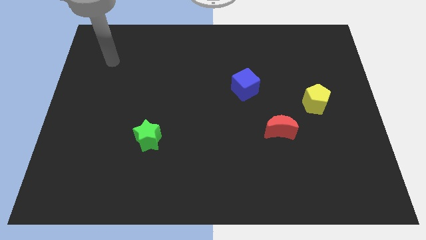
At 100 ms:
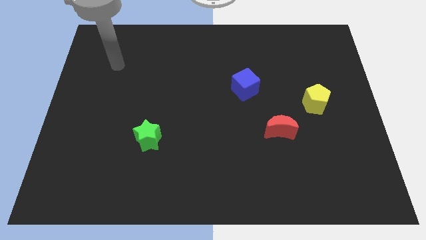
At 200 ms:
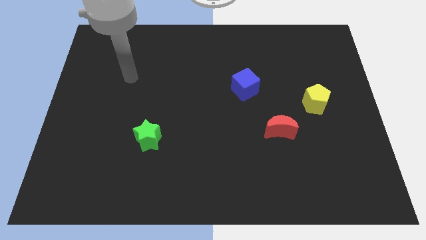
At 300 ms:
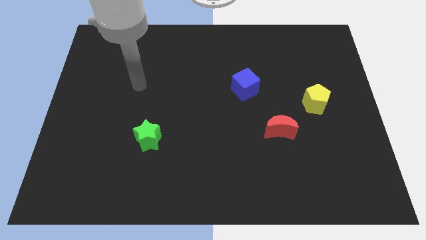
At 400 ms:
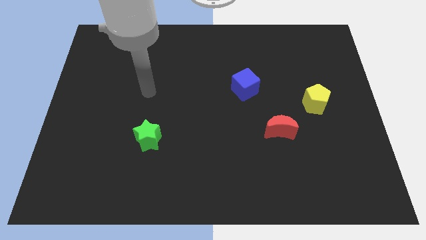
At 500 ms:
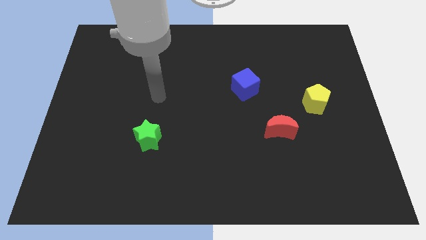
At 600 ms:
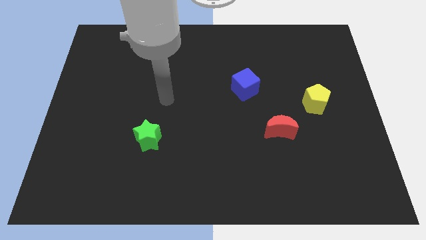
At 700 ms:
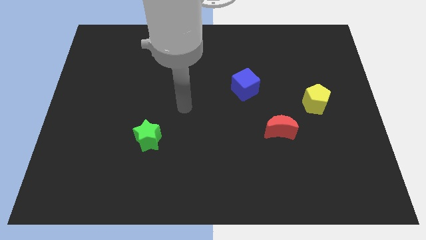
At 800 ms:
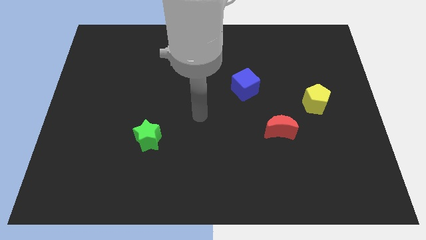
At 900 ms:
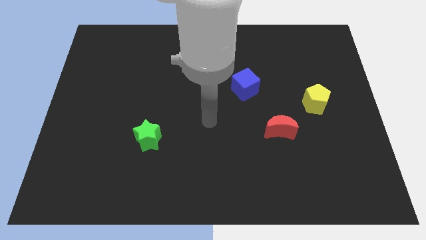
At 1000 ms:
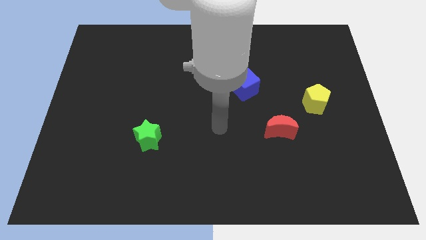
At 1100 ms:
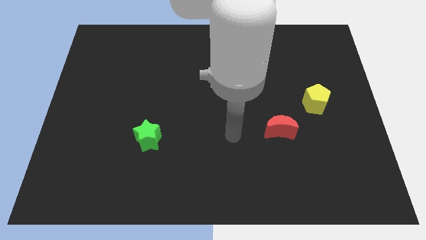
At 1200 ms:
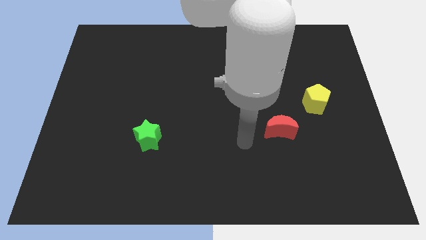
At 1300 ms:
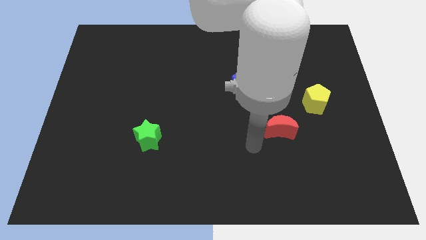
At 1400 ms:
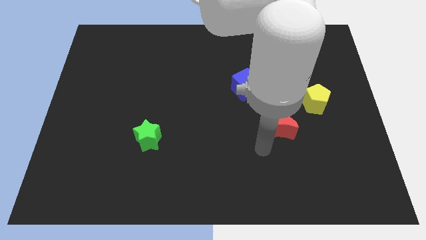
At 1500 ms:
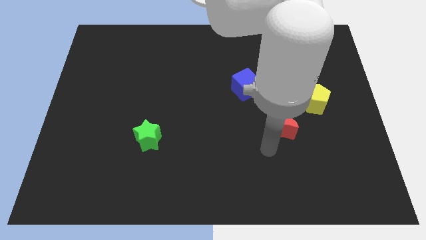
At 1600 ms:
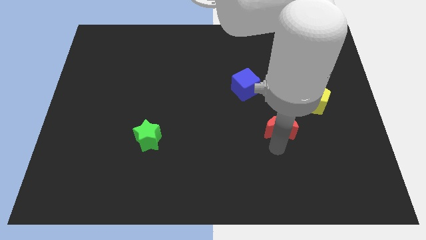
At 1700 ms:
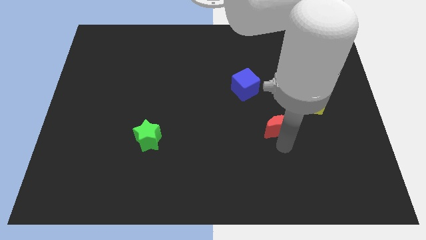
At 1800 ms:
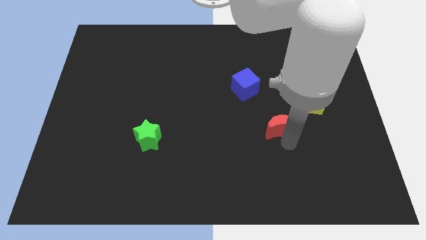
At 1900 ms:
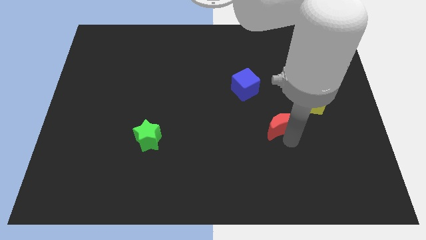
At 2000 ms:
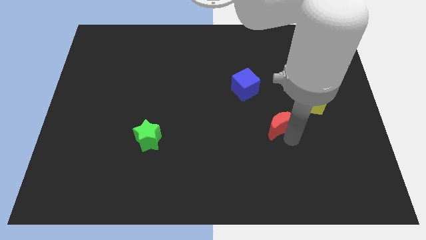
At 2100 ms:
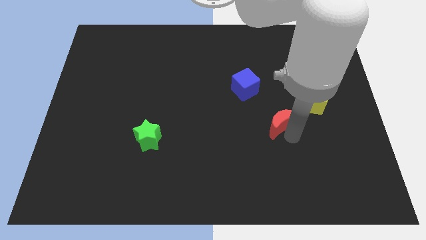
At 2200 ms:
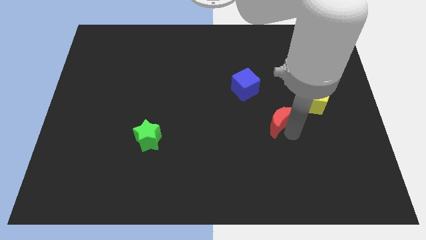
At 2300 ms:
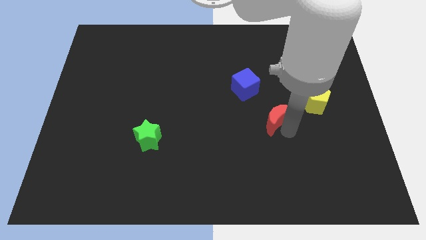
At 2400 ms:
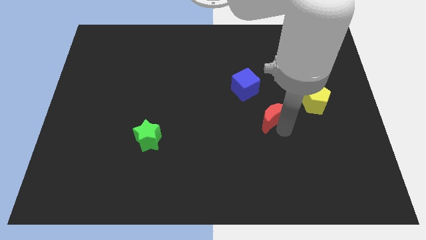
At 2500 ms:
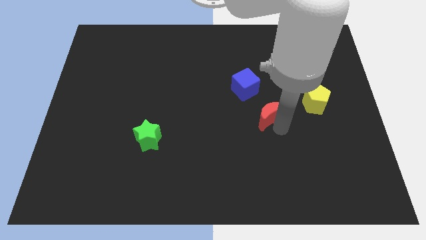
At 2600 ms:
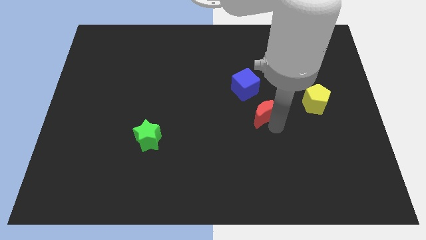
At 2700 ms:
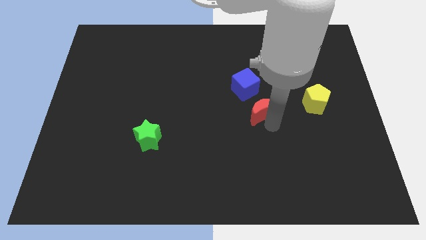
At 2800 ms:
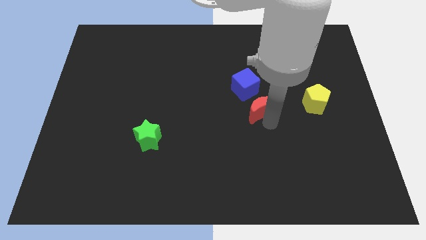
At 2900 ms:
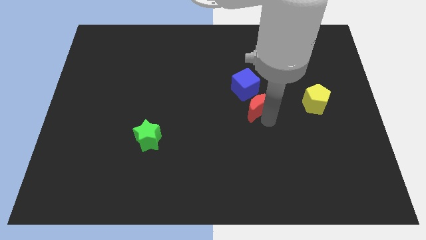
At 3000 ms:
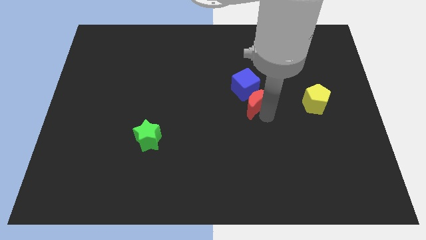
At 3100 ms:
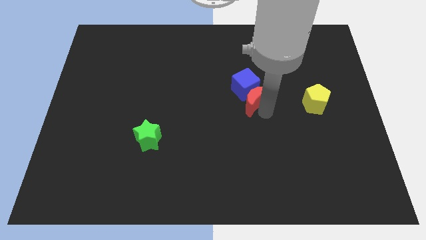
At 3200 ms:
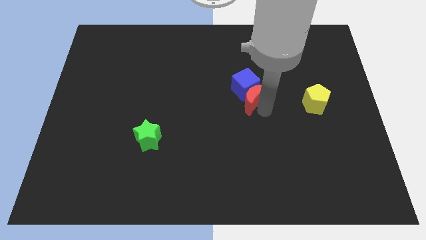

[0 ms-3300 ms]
move the red block next to the blue block

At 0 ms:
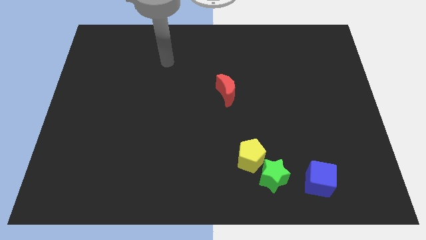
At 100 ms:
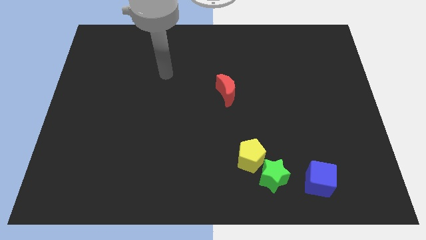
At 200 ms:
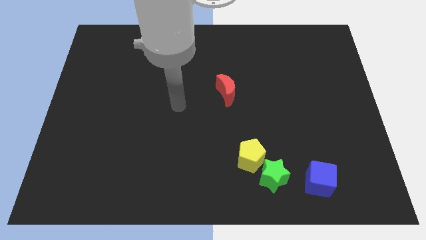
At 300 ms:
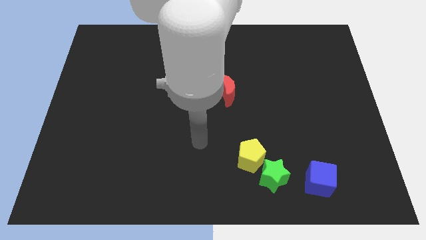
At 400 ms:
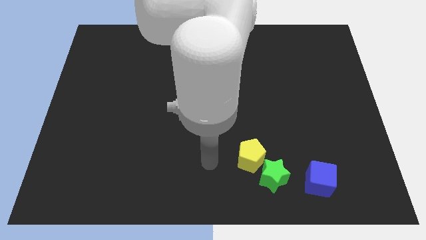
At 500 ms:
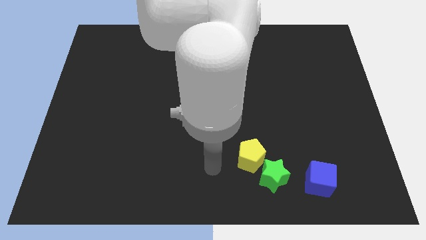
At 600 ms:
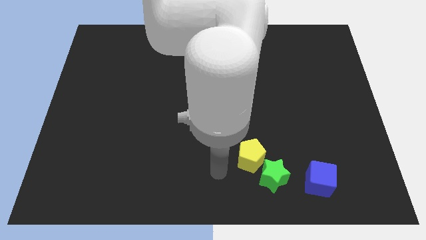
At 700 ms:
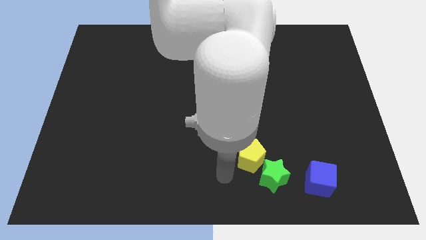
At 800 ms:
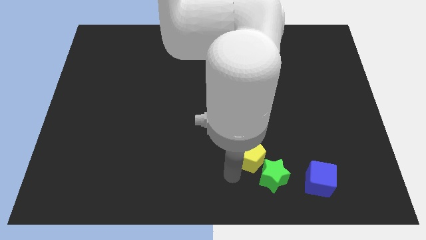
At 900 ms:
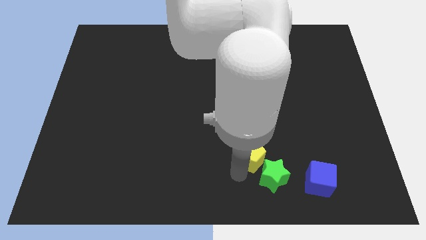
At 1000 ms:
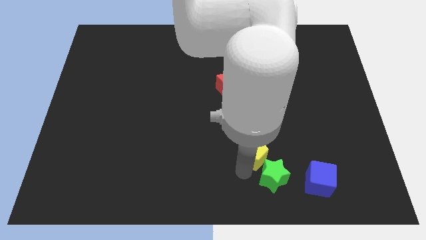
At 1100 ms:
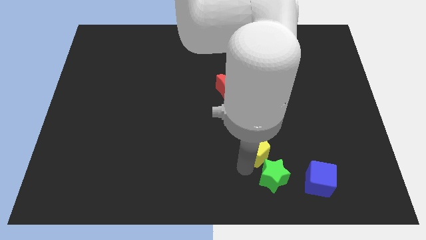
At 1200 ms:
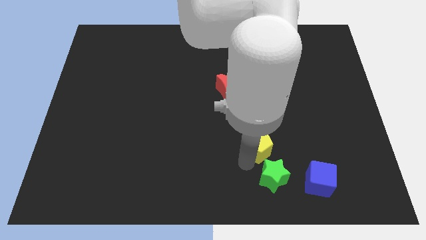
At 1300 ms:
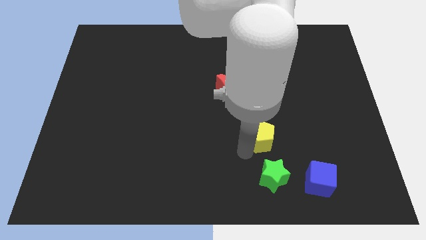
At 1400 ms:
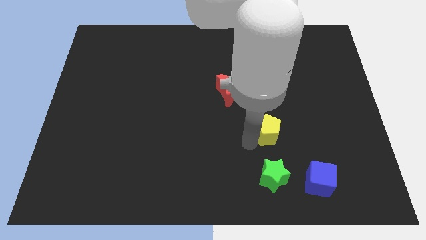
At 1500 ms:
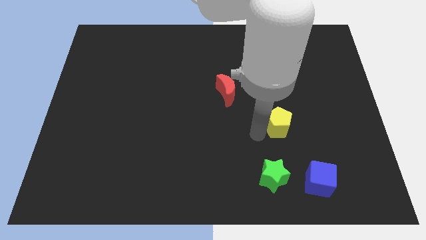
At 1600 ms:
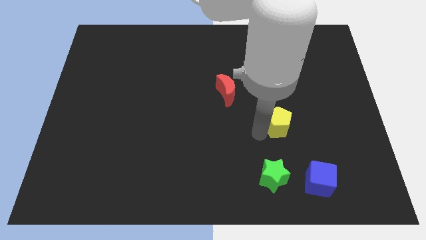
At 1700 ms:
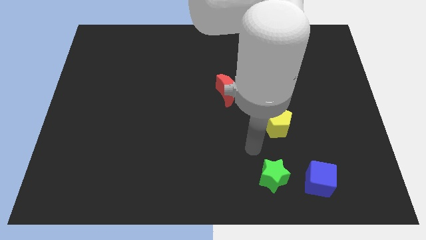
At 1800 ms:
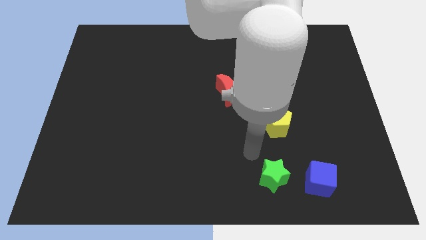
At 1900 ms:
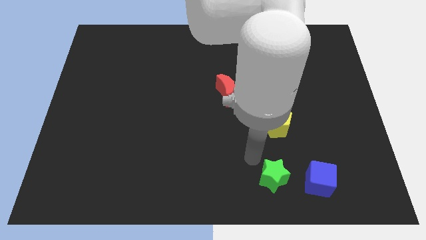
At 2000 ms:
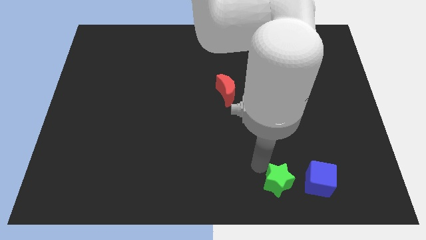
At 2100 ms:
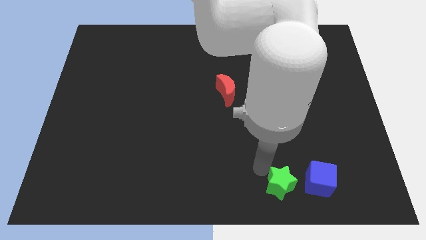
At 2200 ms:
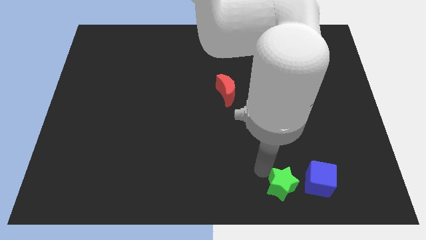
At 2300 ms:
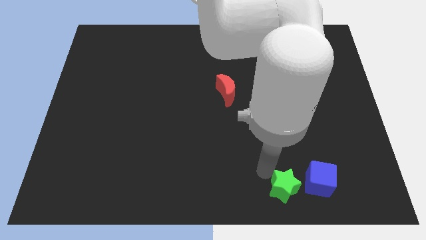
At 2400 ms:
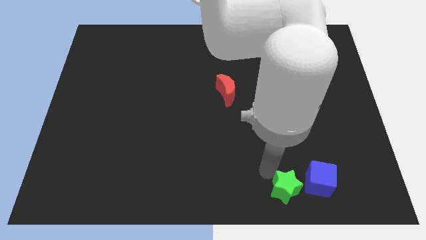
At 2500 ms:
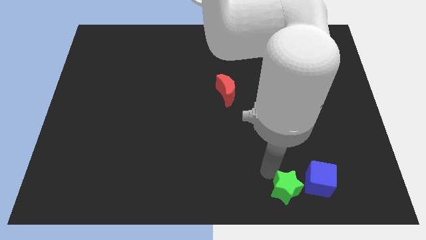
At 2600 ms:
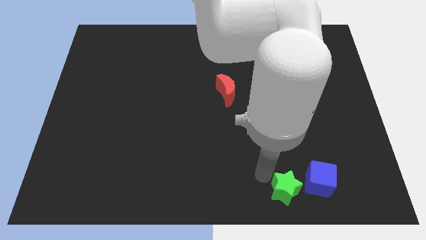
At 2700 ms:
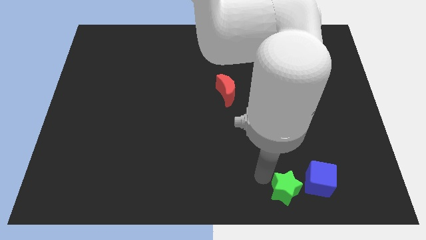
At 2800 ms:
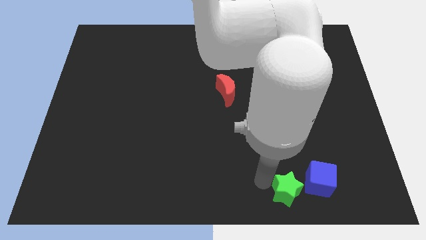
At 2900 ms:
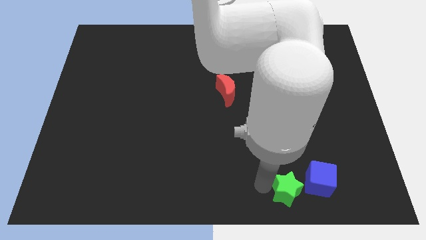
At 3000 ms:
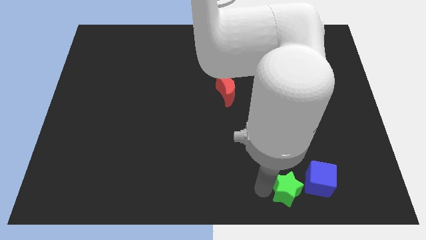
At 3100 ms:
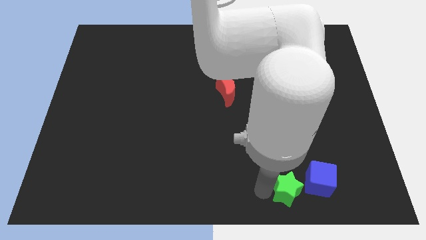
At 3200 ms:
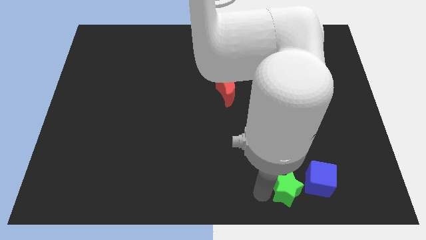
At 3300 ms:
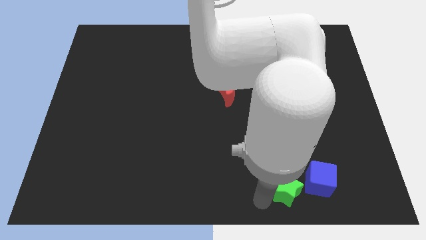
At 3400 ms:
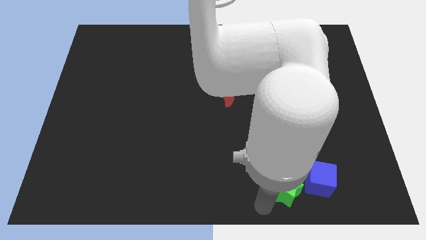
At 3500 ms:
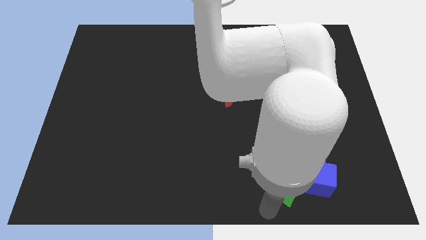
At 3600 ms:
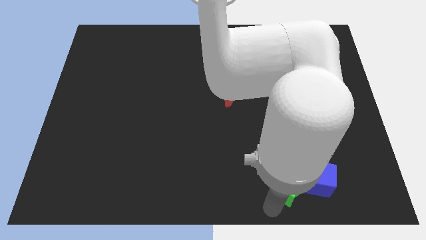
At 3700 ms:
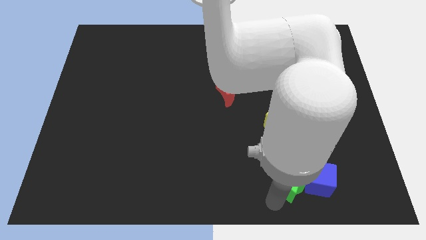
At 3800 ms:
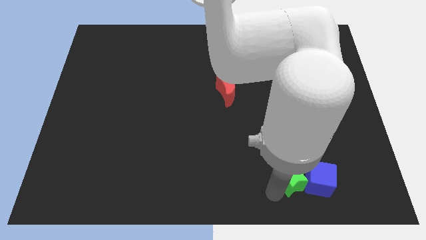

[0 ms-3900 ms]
move the green star to the cube

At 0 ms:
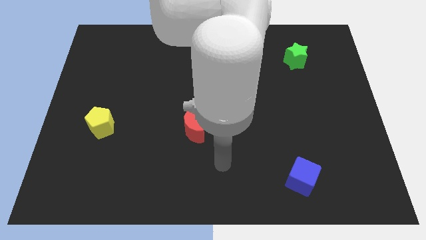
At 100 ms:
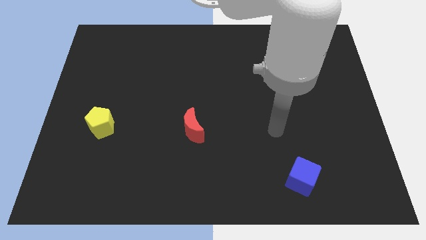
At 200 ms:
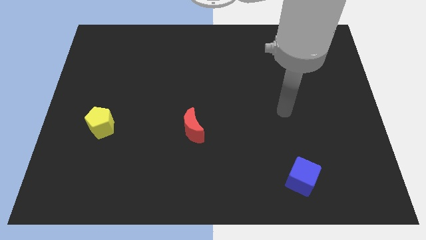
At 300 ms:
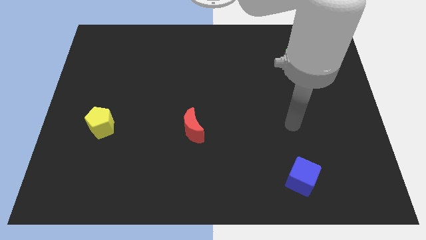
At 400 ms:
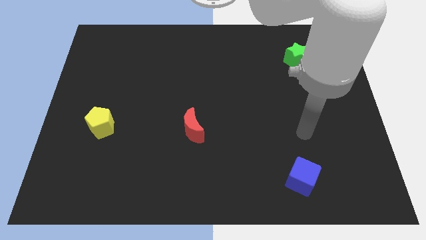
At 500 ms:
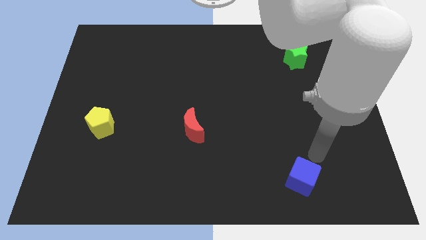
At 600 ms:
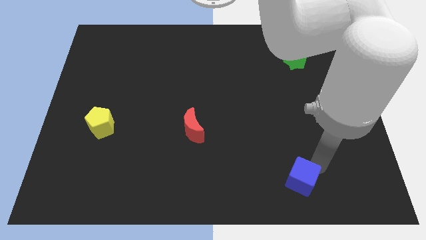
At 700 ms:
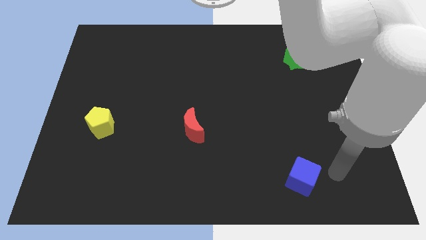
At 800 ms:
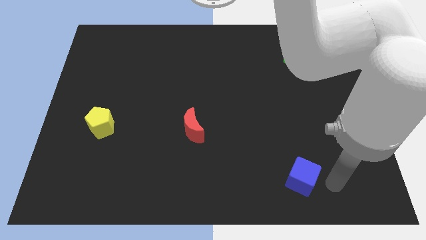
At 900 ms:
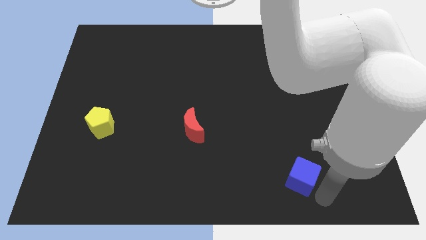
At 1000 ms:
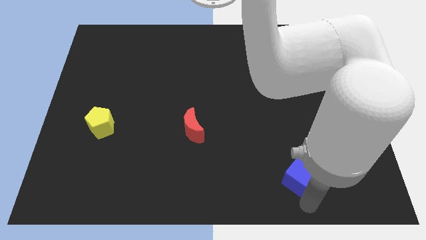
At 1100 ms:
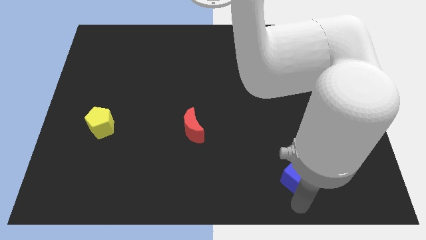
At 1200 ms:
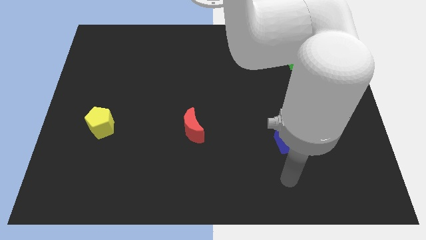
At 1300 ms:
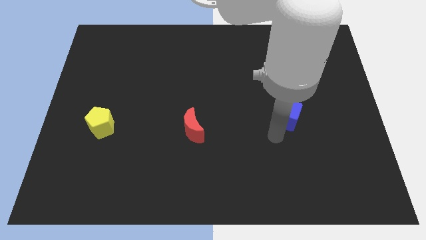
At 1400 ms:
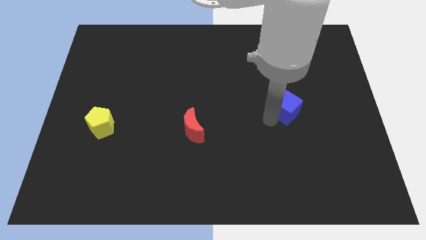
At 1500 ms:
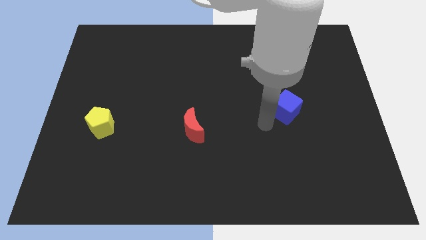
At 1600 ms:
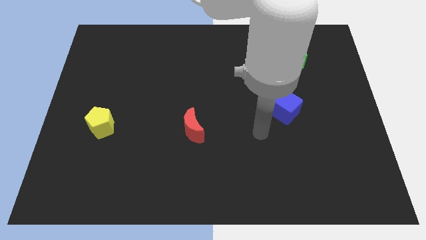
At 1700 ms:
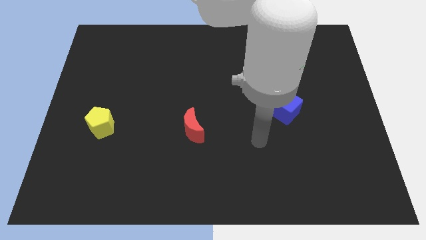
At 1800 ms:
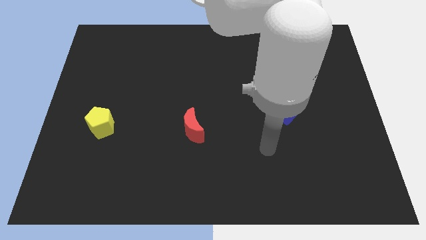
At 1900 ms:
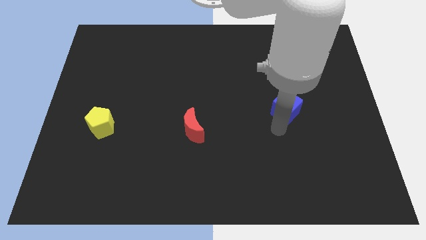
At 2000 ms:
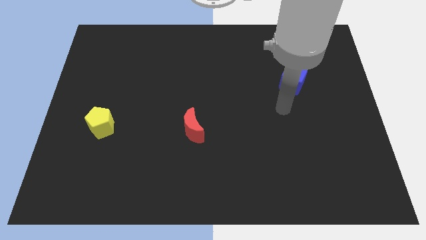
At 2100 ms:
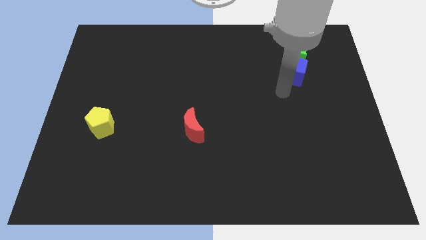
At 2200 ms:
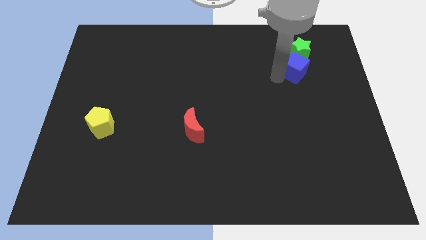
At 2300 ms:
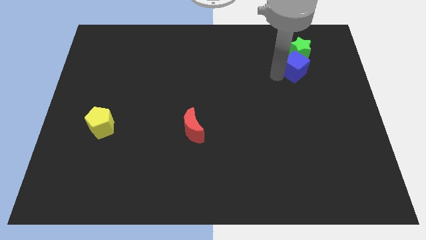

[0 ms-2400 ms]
move the cube towards the green block
